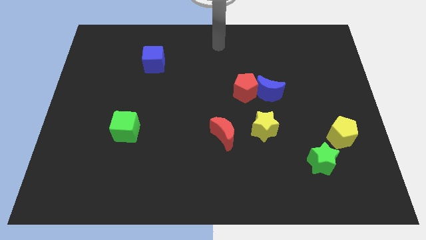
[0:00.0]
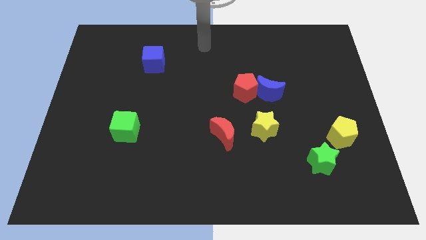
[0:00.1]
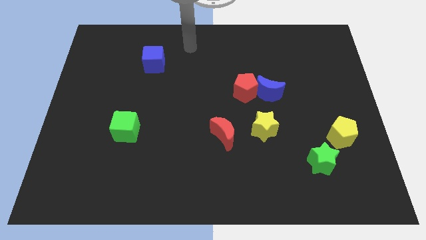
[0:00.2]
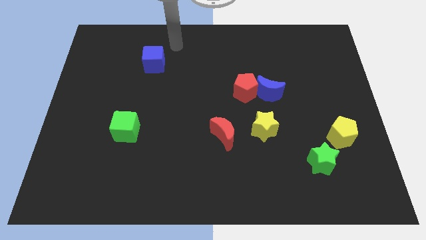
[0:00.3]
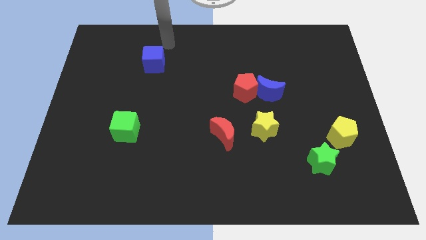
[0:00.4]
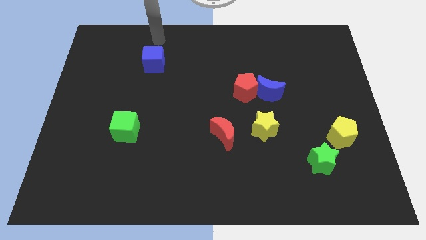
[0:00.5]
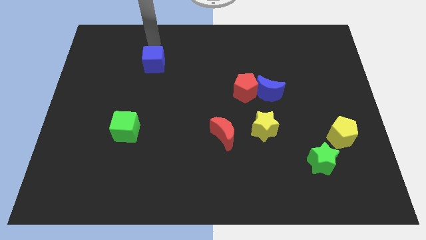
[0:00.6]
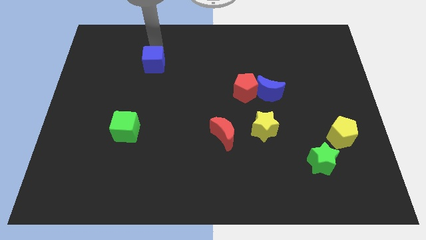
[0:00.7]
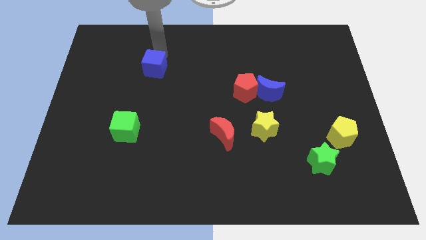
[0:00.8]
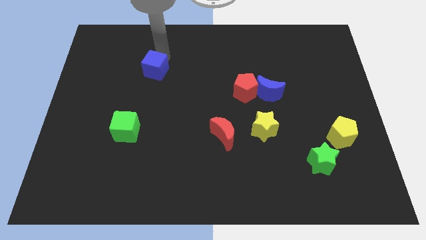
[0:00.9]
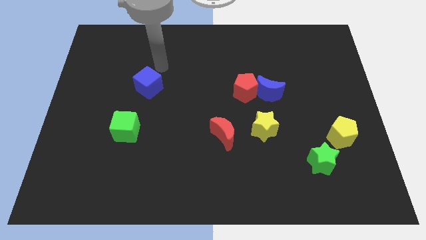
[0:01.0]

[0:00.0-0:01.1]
place the blue cube left to the red pentagon

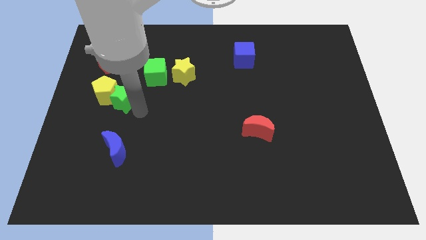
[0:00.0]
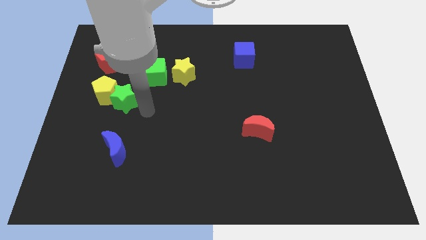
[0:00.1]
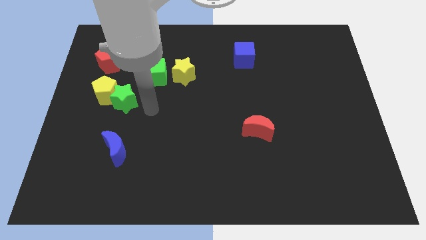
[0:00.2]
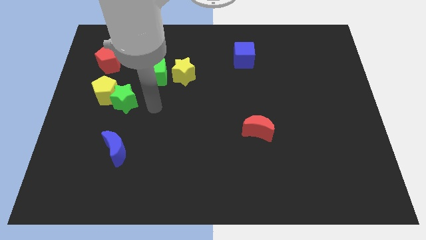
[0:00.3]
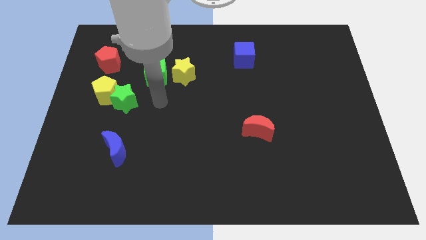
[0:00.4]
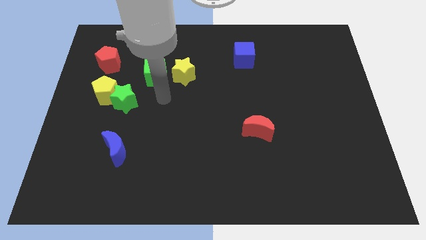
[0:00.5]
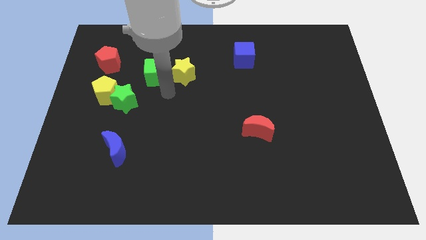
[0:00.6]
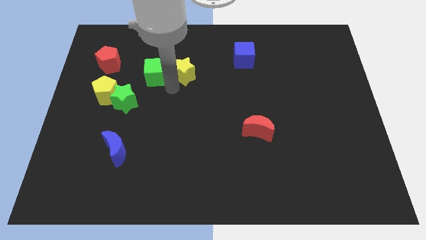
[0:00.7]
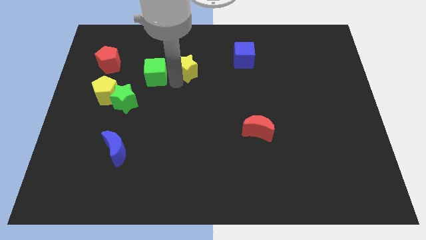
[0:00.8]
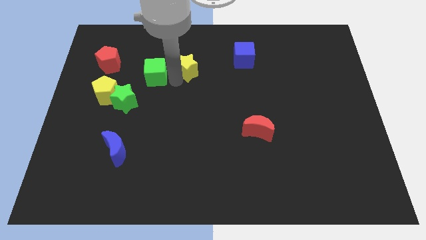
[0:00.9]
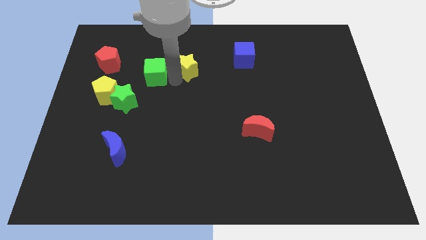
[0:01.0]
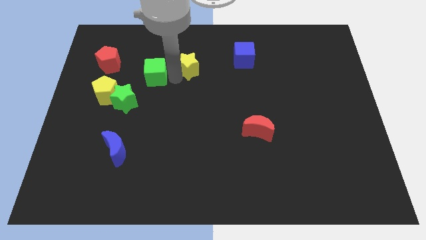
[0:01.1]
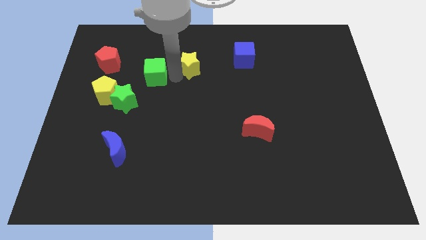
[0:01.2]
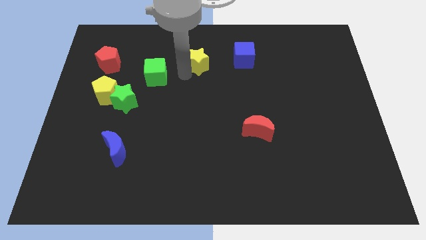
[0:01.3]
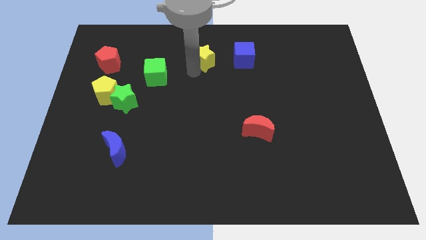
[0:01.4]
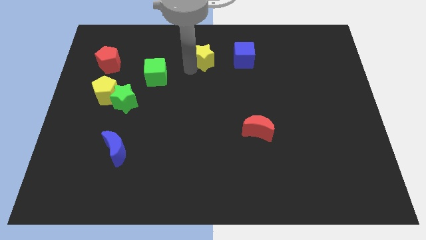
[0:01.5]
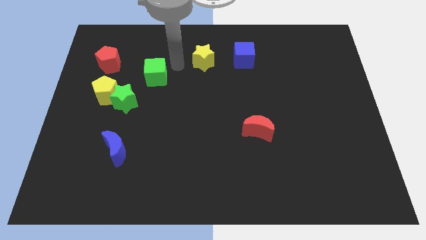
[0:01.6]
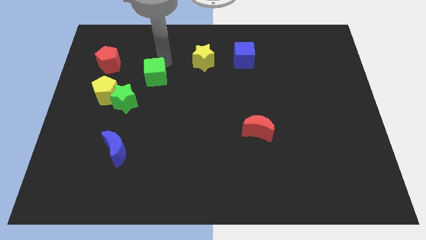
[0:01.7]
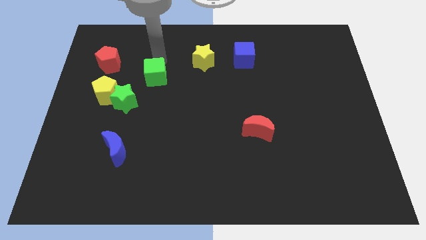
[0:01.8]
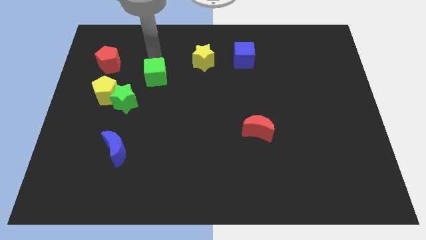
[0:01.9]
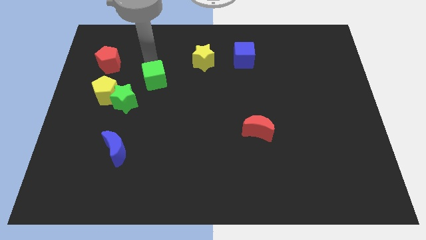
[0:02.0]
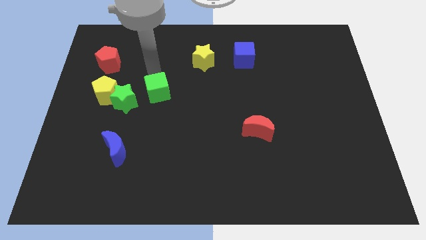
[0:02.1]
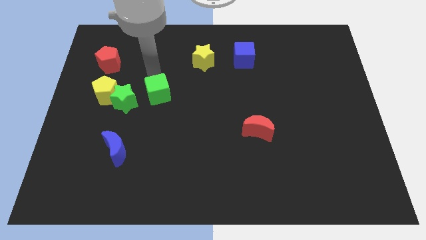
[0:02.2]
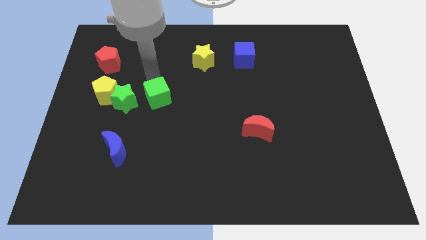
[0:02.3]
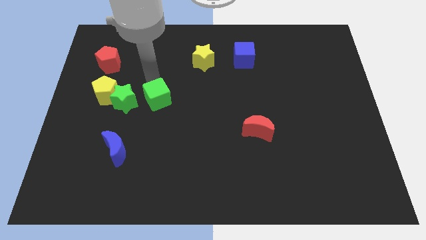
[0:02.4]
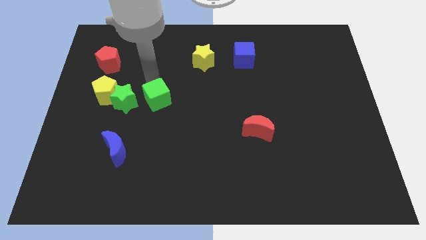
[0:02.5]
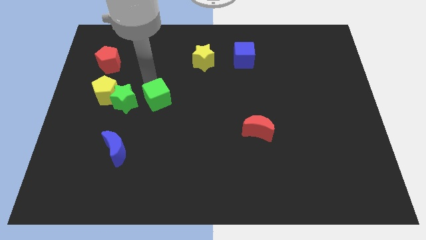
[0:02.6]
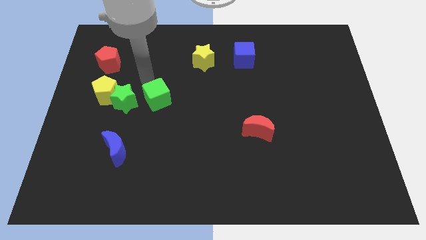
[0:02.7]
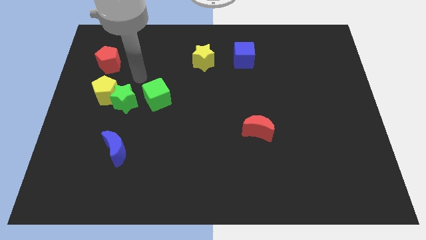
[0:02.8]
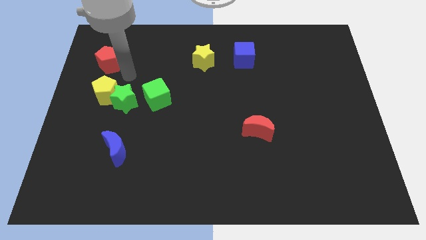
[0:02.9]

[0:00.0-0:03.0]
move the yellow star and green cube with the hand

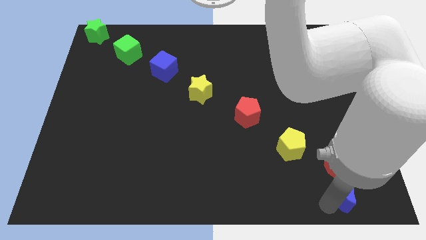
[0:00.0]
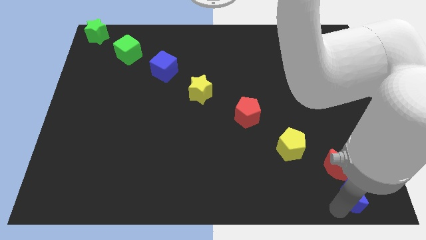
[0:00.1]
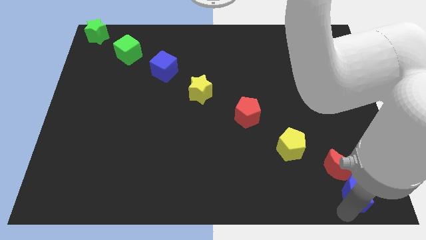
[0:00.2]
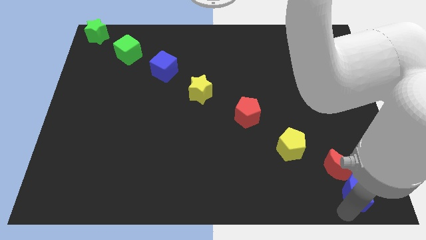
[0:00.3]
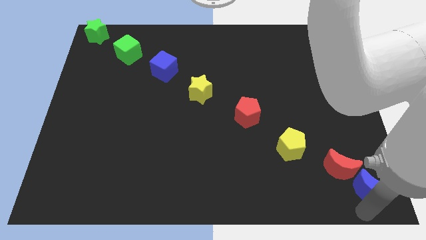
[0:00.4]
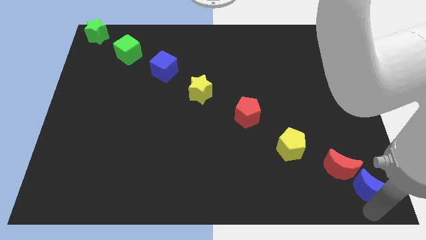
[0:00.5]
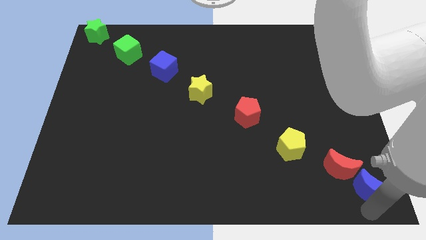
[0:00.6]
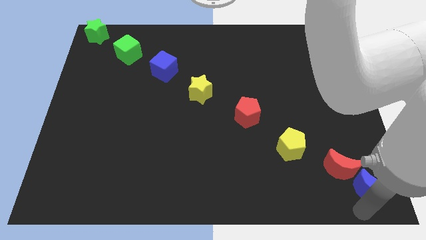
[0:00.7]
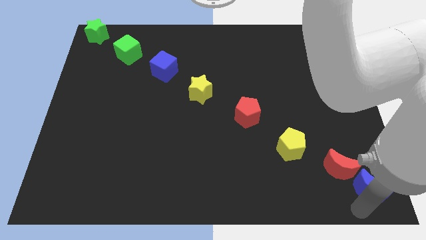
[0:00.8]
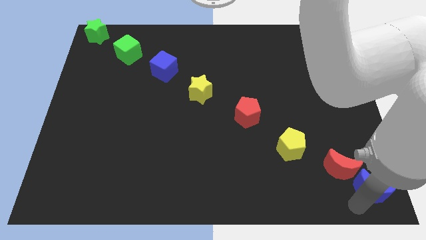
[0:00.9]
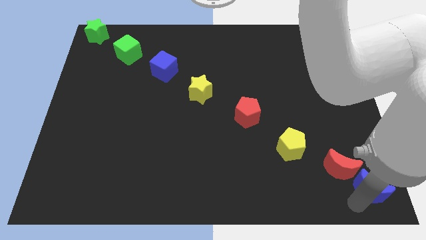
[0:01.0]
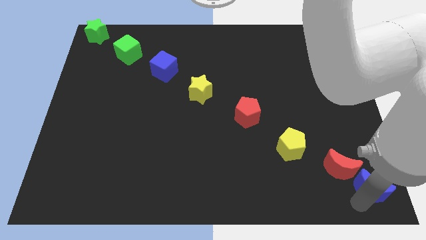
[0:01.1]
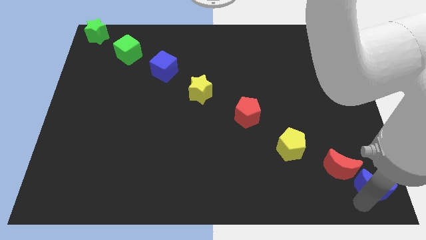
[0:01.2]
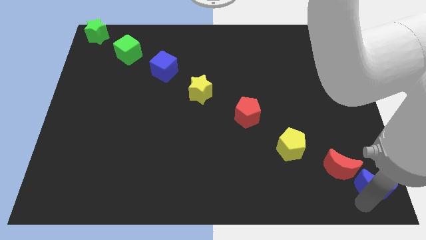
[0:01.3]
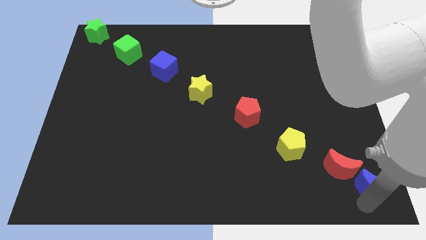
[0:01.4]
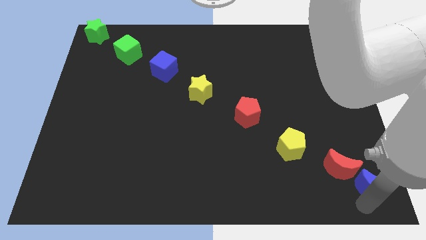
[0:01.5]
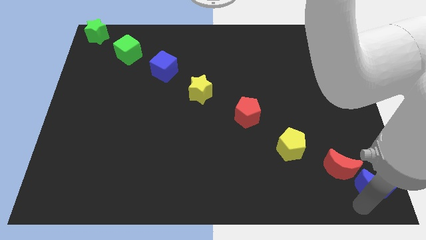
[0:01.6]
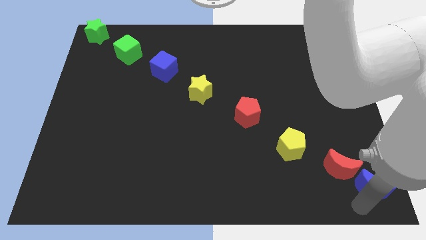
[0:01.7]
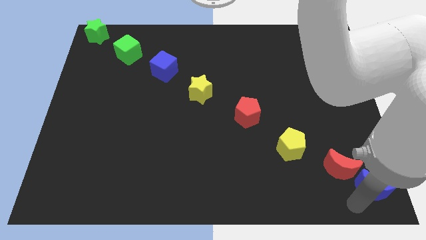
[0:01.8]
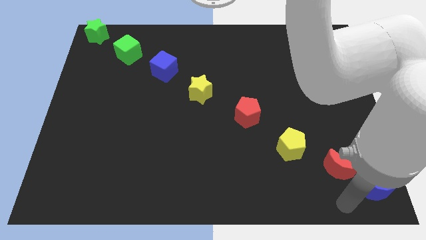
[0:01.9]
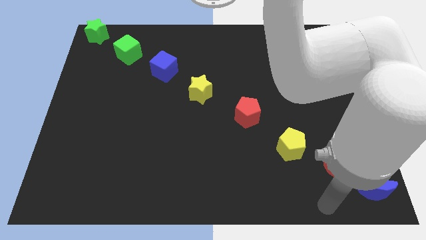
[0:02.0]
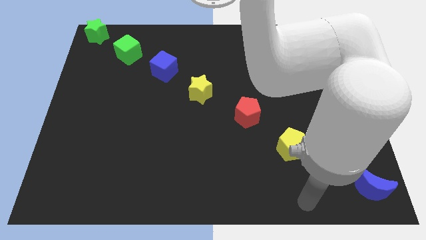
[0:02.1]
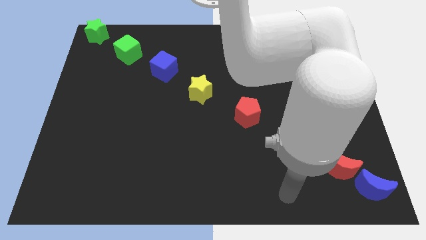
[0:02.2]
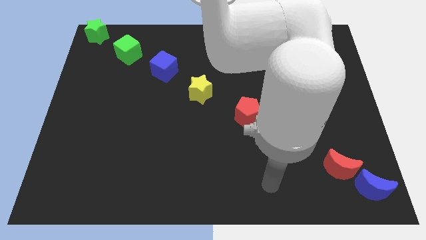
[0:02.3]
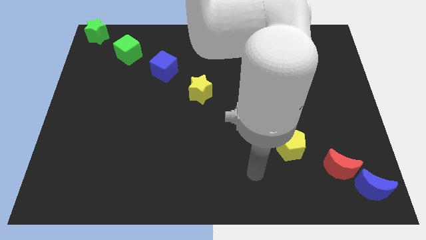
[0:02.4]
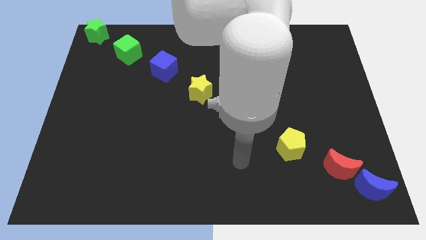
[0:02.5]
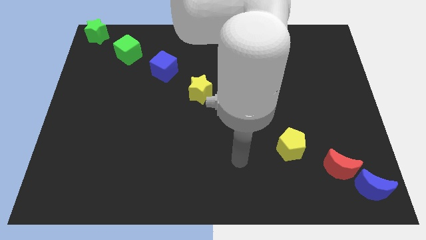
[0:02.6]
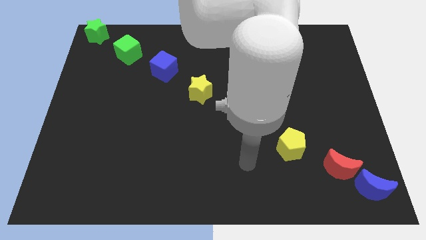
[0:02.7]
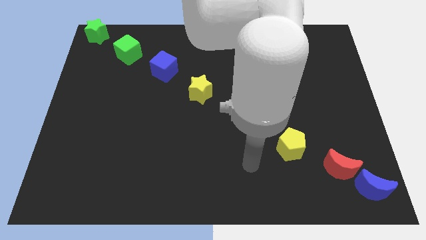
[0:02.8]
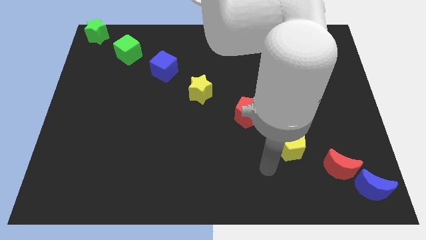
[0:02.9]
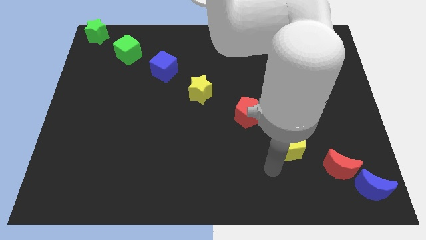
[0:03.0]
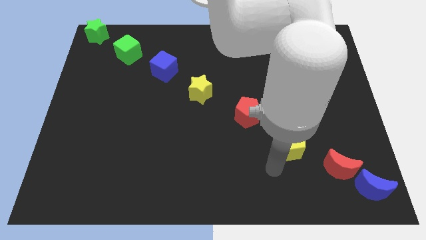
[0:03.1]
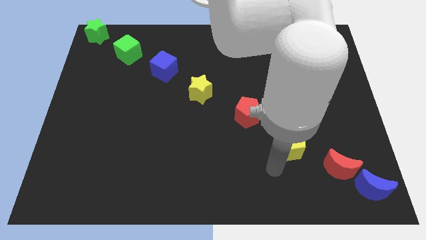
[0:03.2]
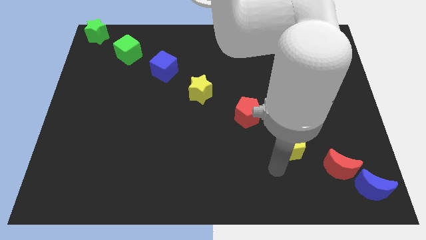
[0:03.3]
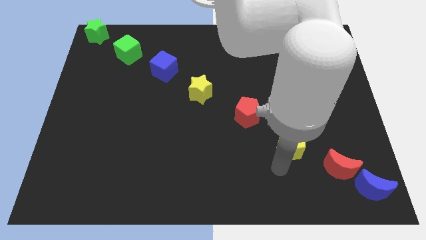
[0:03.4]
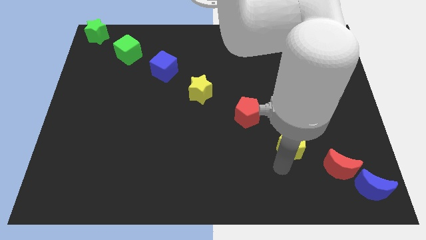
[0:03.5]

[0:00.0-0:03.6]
place the blue moon diagonally at the bottom right corner of the board

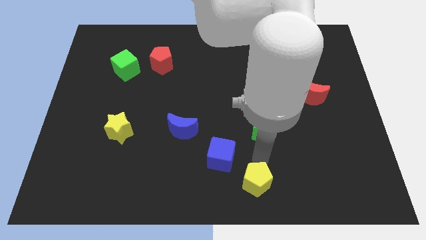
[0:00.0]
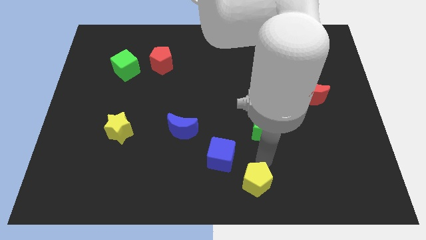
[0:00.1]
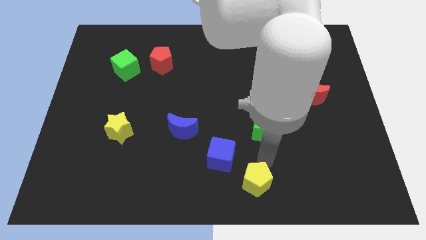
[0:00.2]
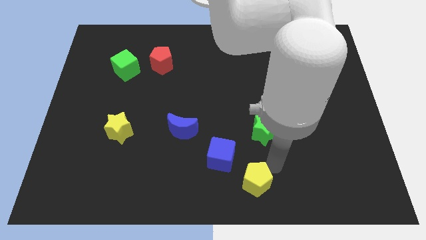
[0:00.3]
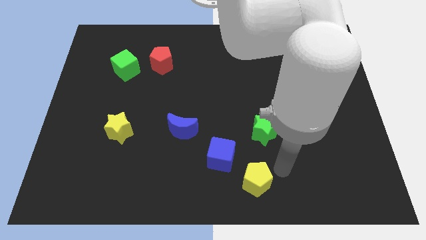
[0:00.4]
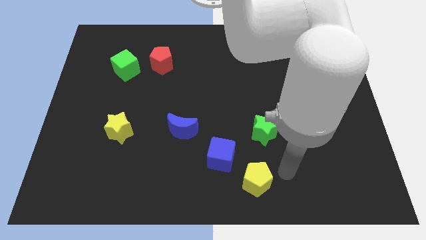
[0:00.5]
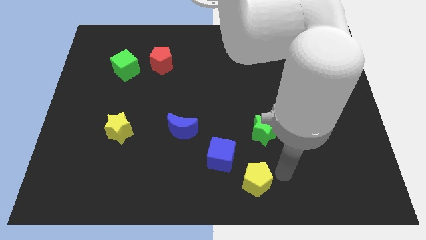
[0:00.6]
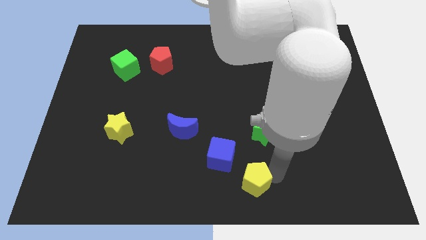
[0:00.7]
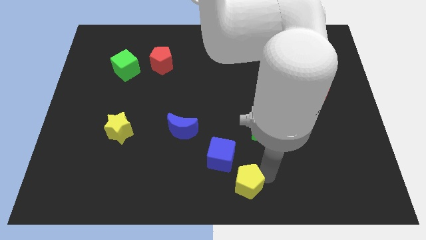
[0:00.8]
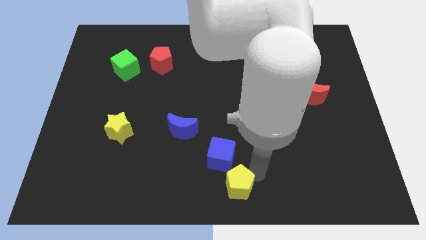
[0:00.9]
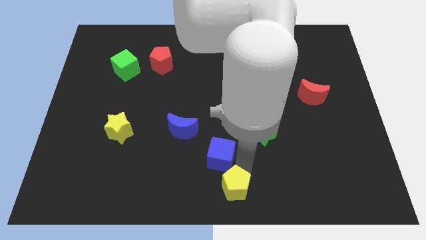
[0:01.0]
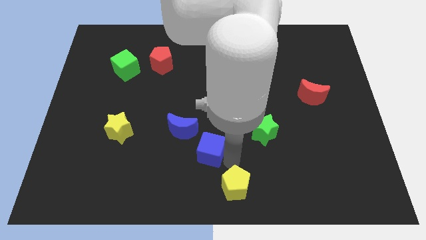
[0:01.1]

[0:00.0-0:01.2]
push the yellow pentagon slightly to the left

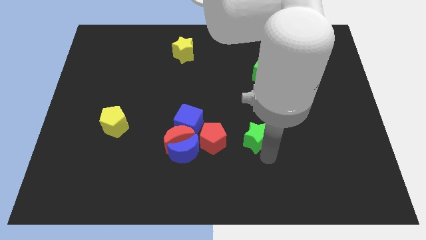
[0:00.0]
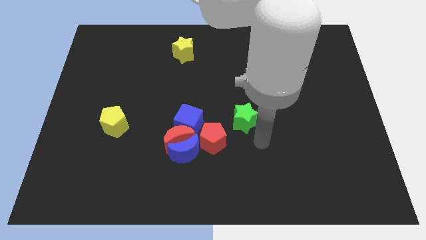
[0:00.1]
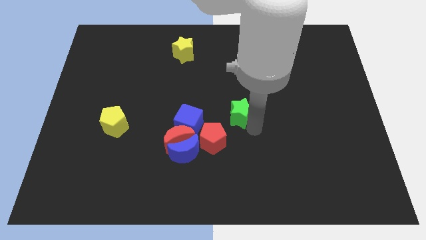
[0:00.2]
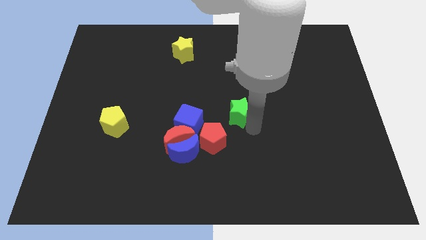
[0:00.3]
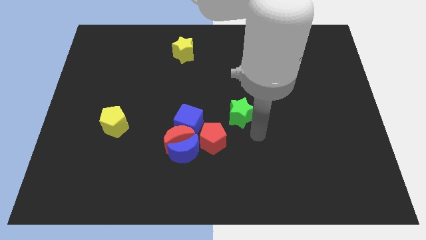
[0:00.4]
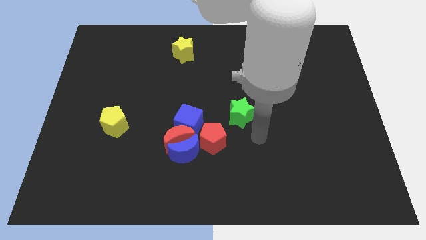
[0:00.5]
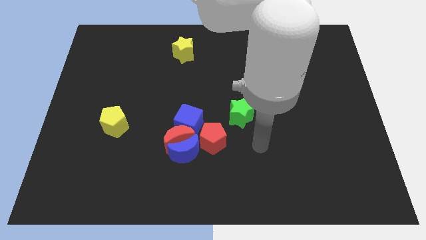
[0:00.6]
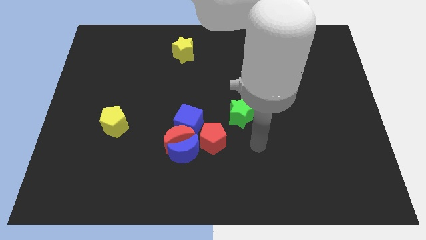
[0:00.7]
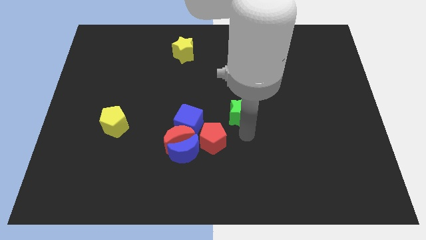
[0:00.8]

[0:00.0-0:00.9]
place the green star between red pentagon and green cube
